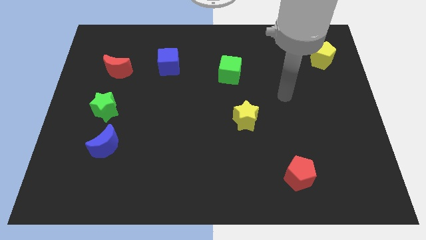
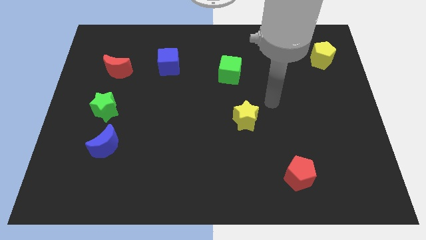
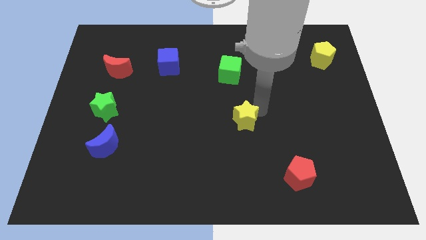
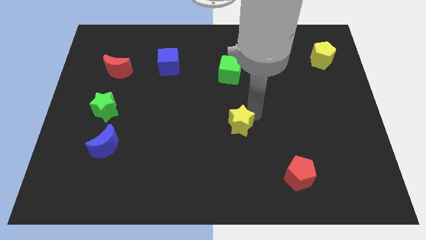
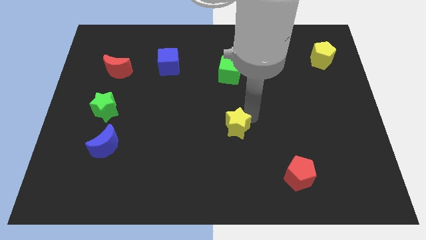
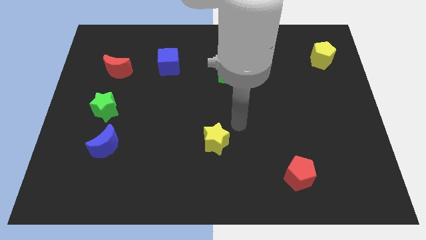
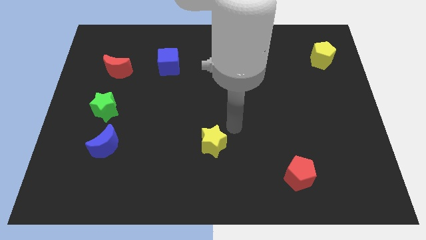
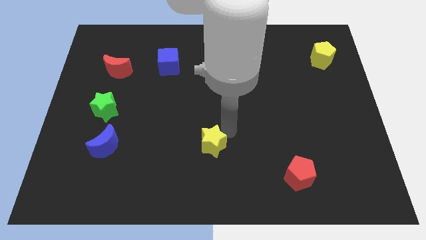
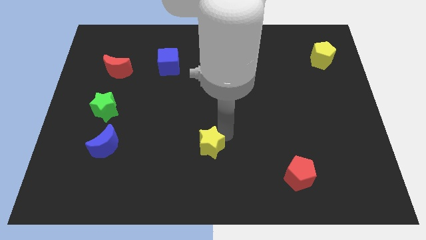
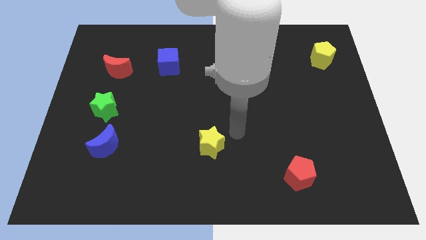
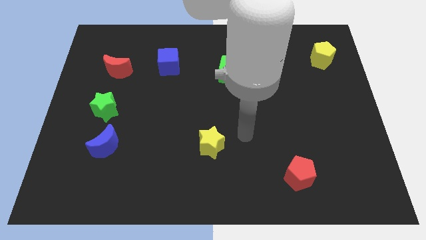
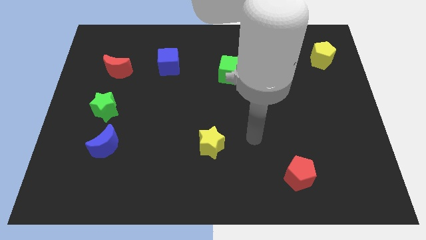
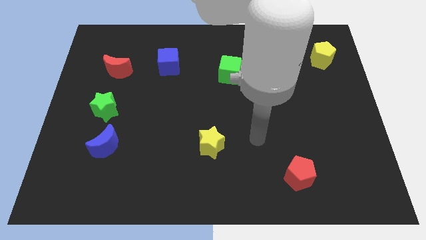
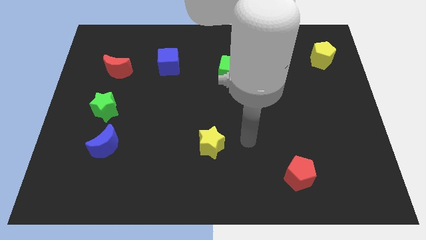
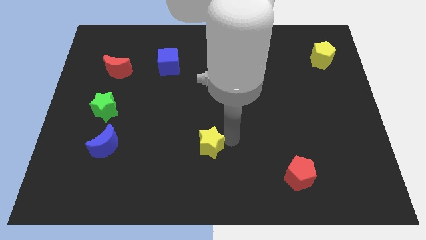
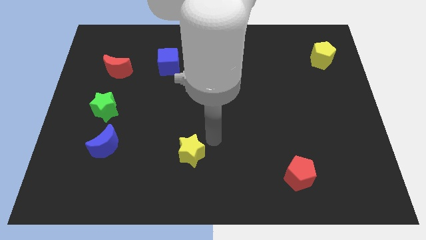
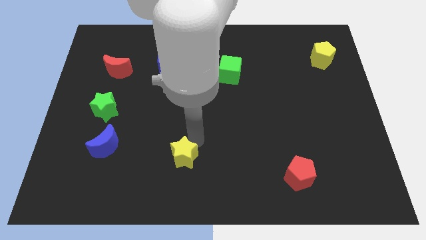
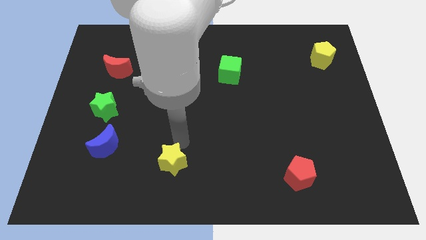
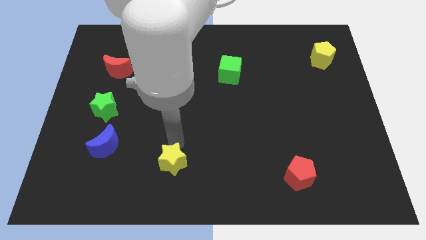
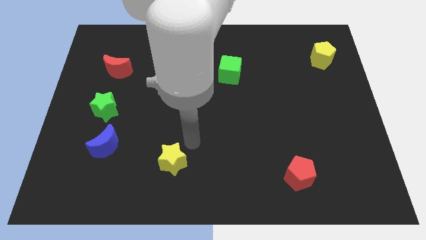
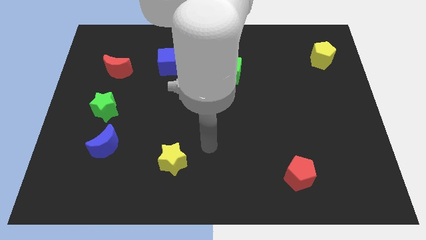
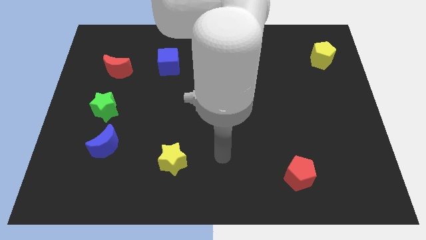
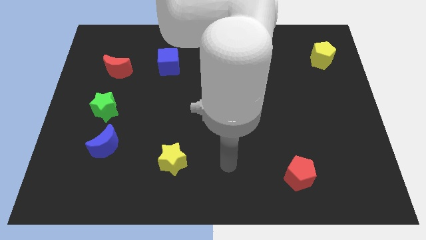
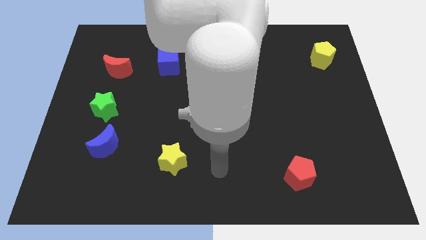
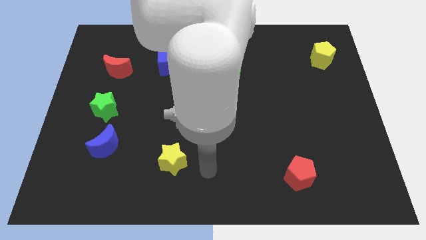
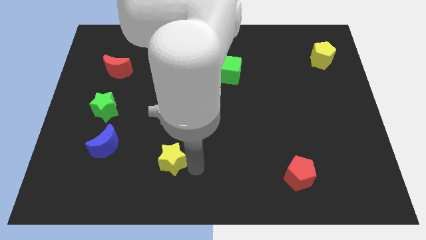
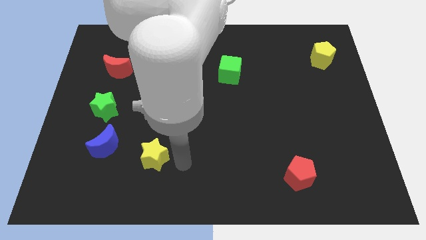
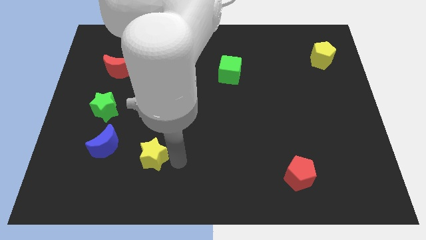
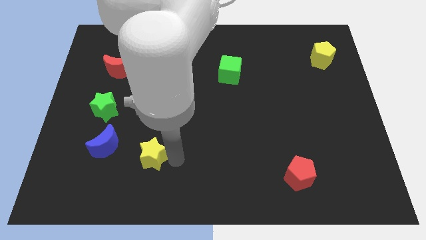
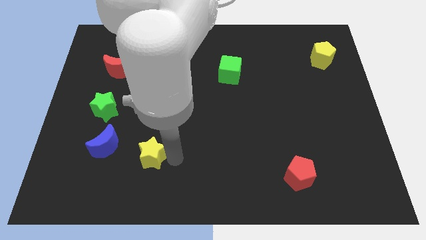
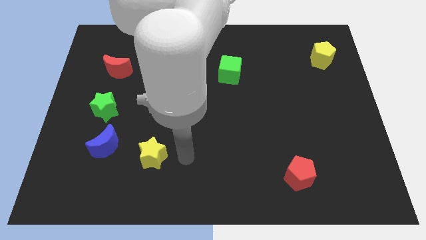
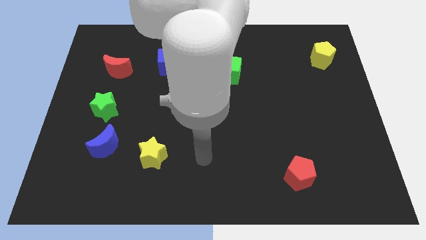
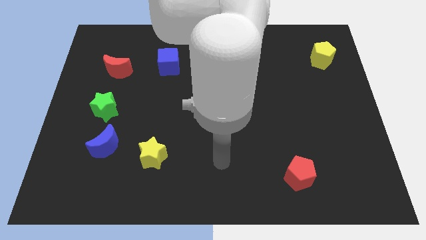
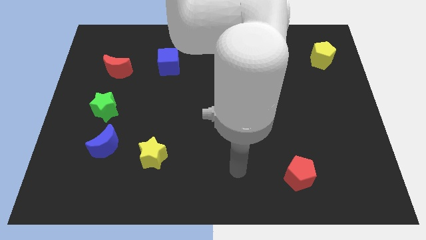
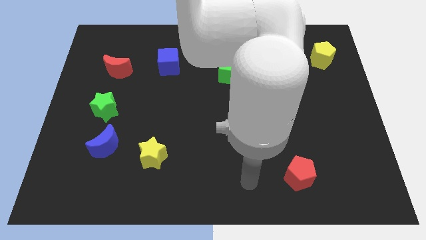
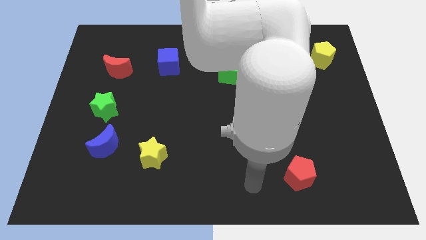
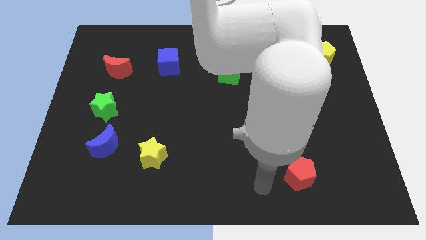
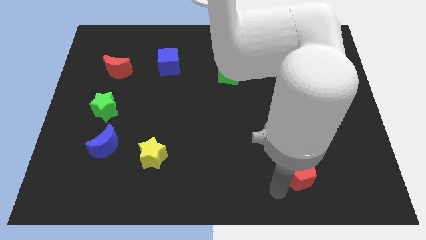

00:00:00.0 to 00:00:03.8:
place the yellow star to the right side of the blue crescent

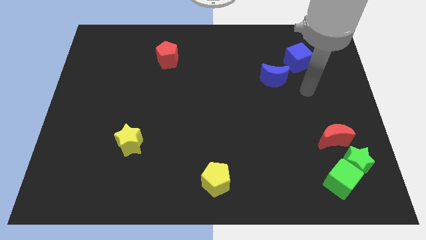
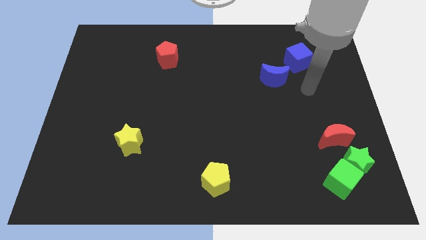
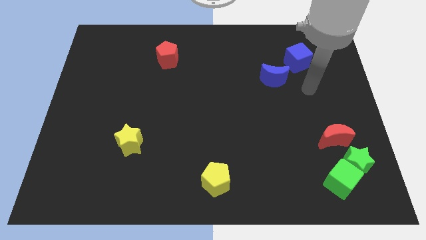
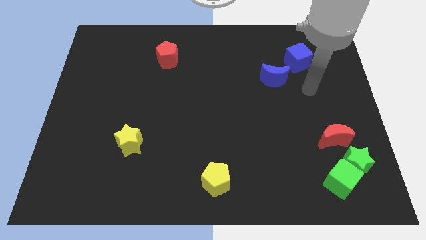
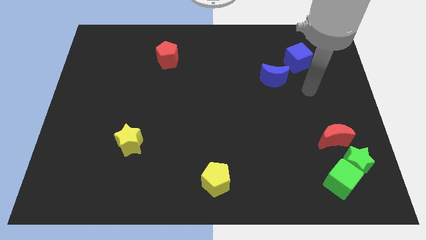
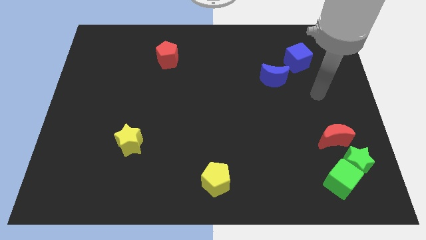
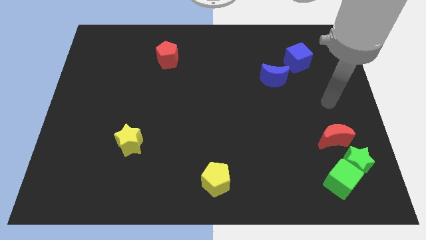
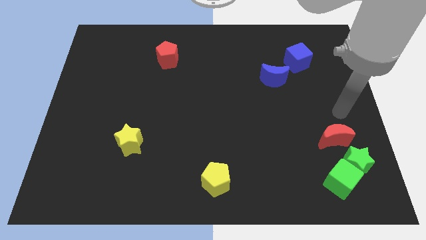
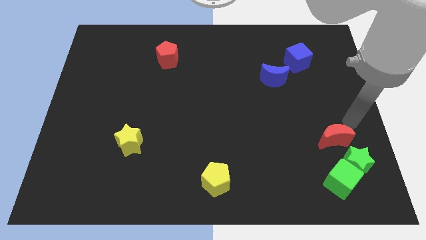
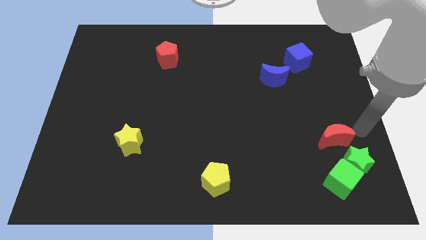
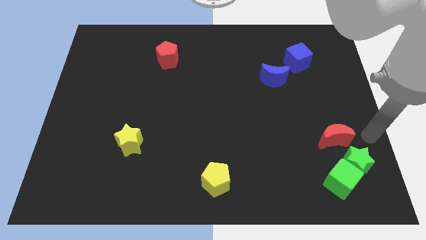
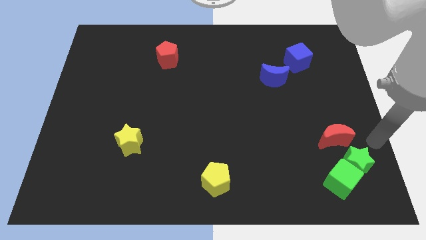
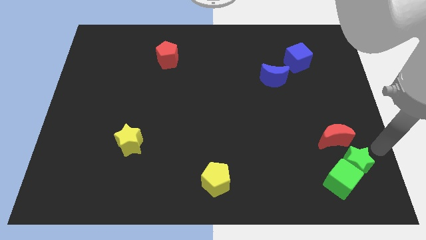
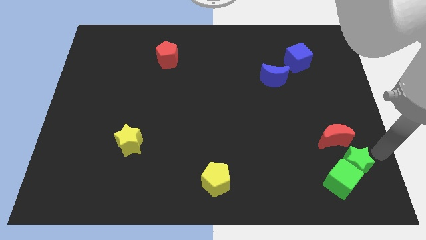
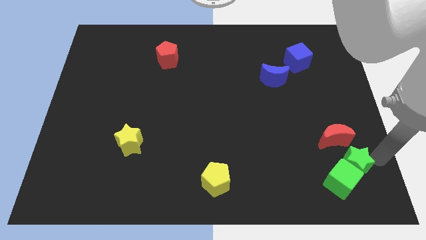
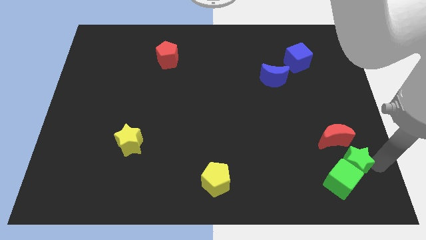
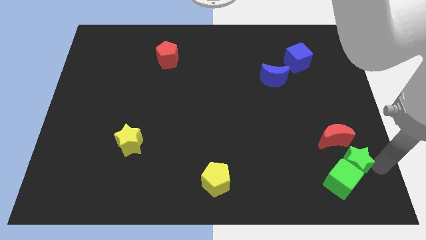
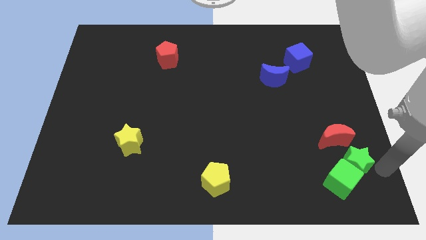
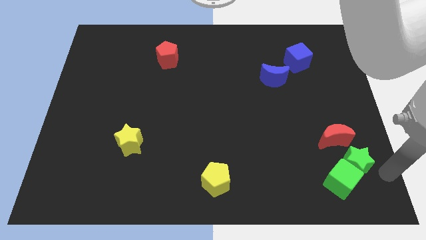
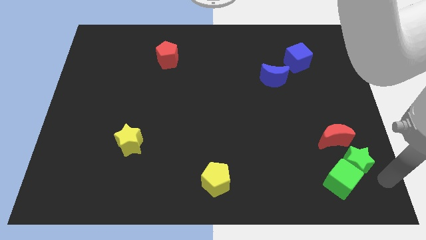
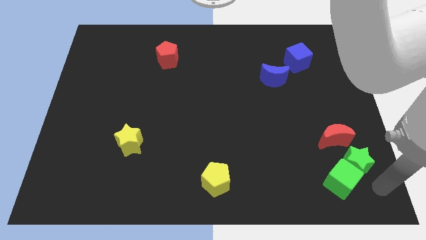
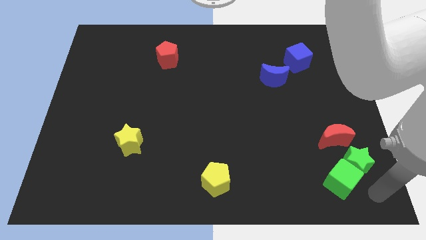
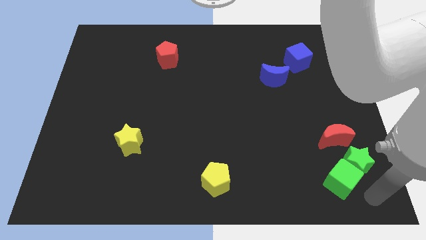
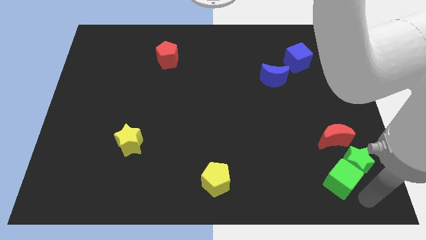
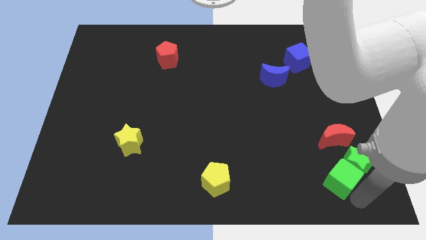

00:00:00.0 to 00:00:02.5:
move your arm towards the bottom right corner of the board

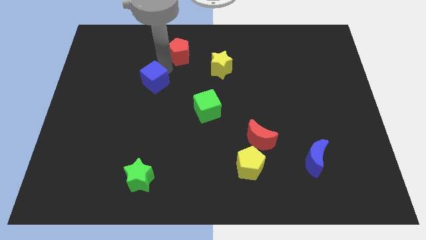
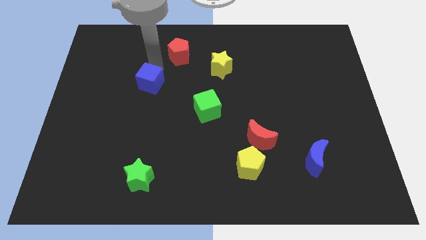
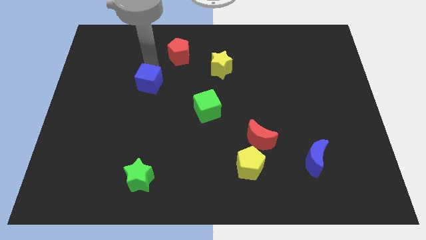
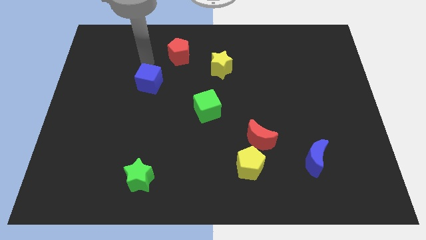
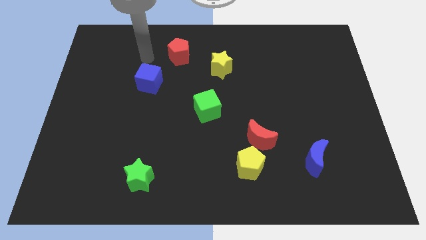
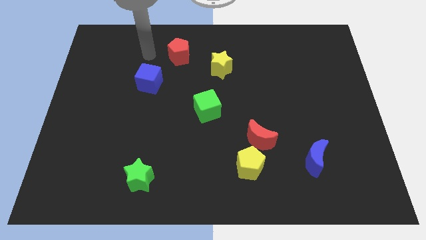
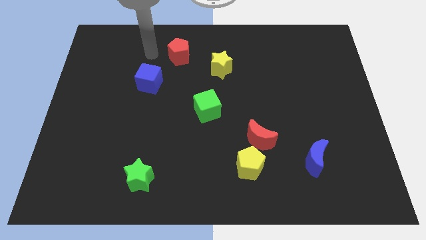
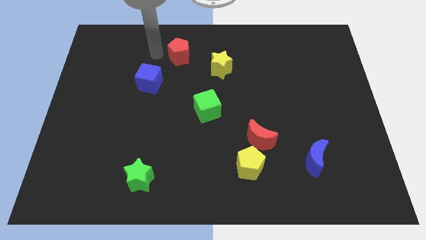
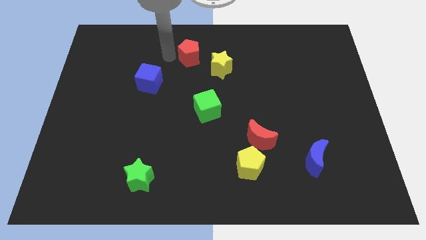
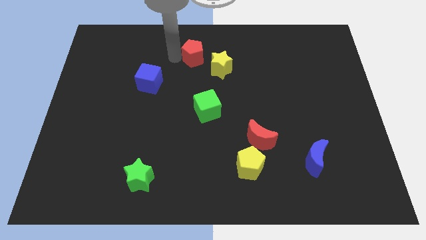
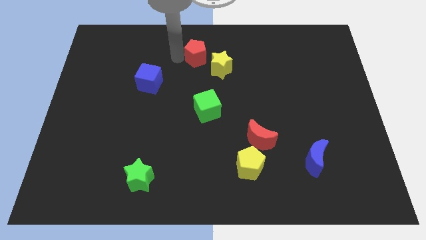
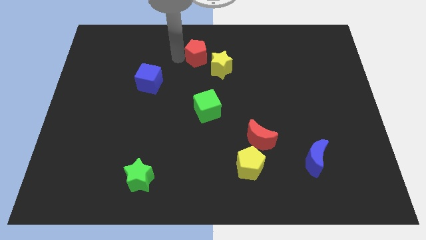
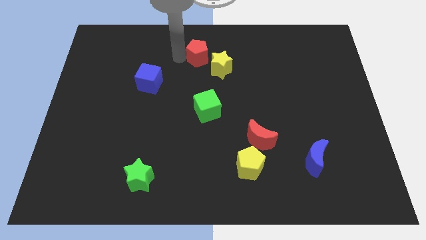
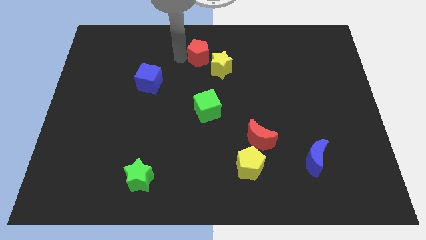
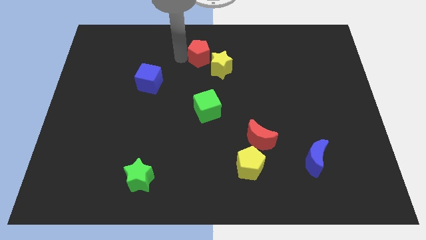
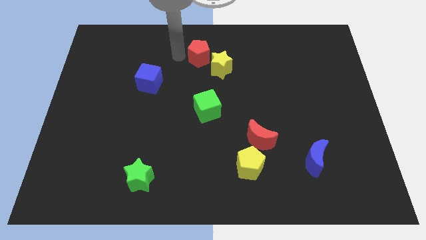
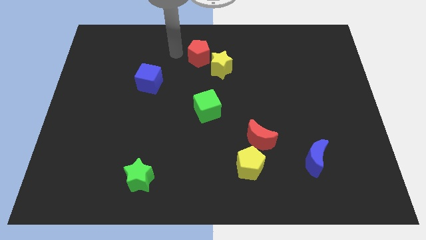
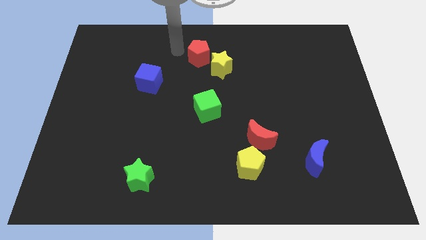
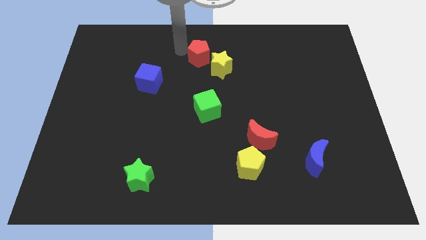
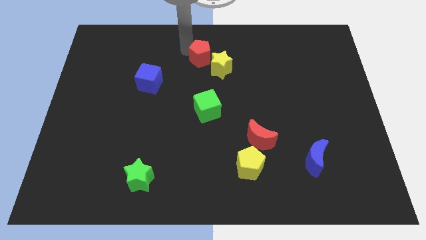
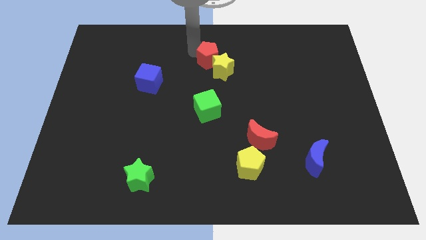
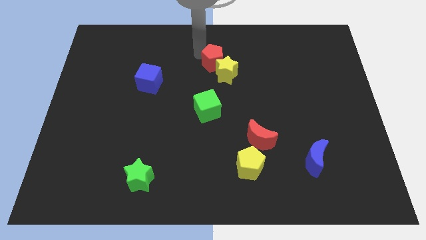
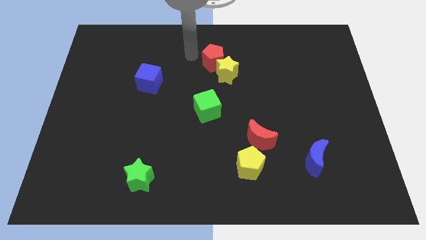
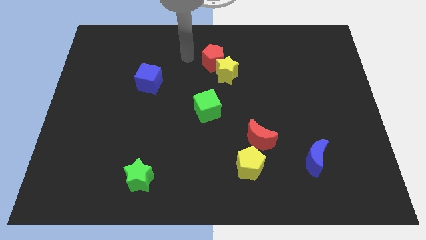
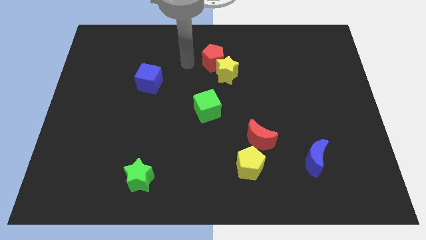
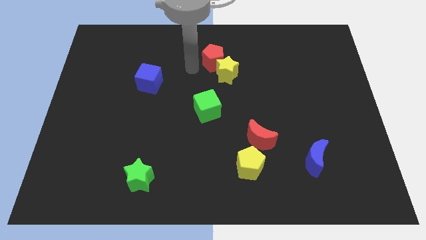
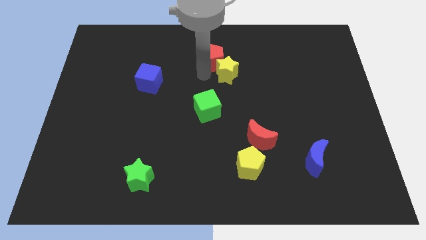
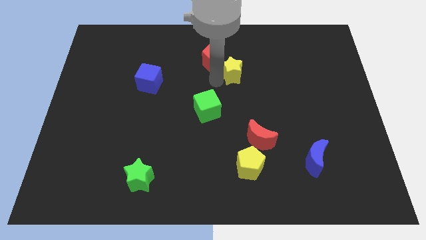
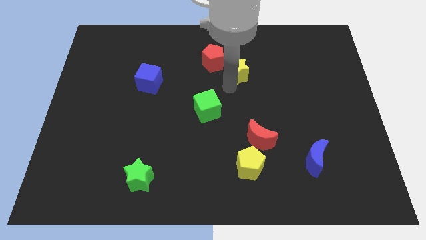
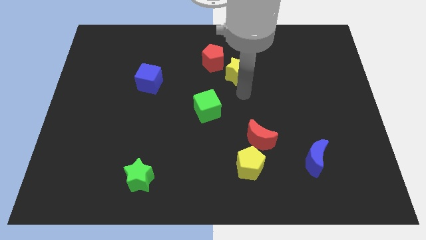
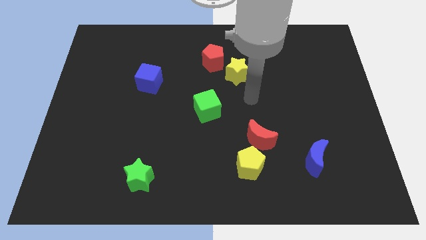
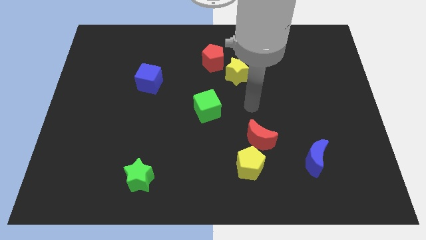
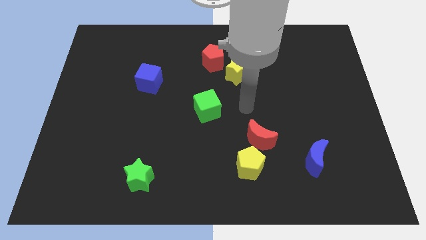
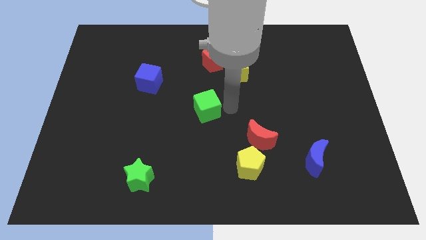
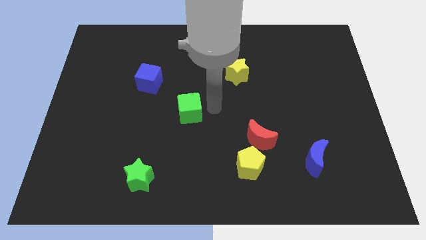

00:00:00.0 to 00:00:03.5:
slightly move the yellow star towards the right
